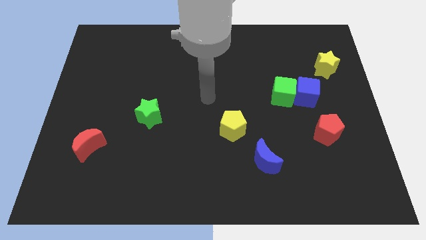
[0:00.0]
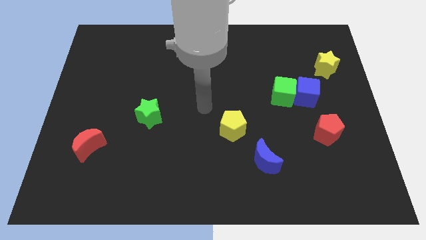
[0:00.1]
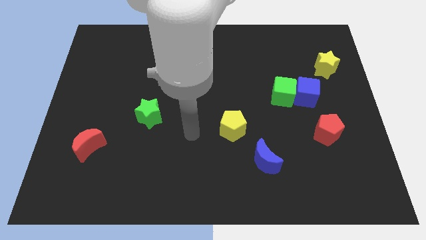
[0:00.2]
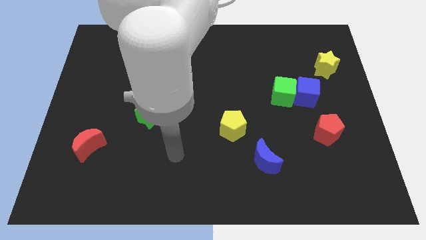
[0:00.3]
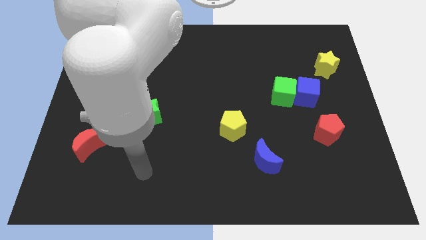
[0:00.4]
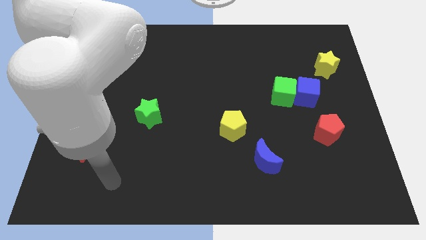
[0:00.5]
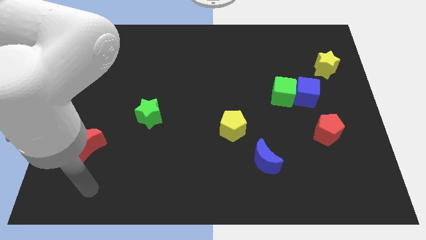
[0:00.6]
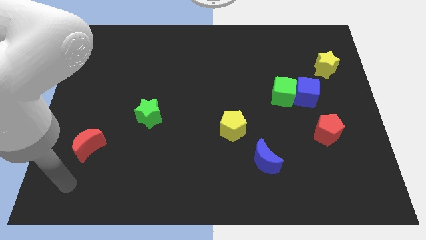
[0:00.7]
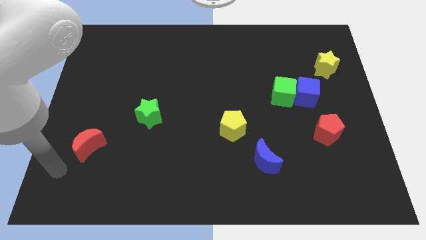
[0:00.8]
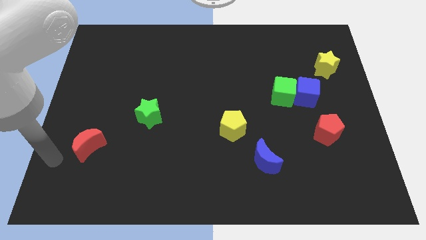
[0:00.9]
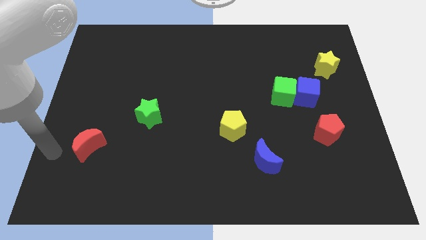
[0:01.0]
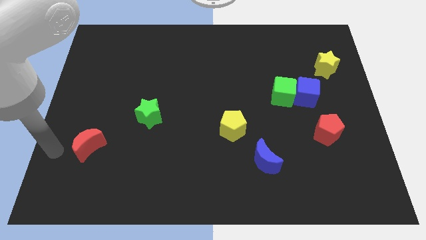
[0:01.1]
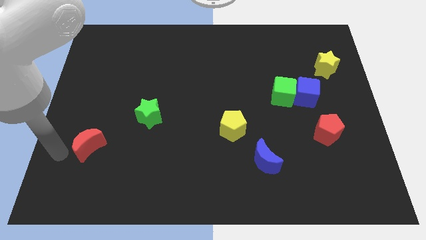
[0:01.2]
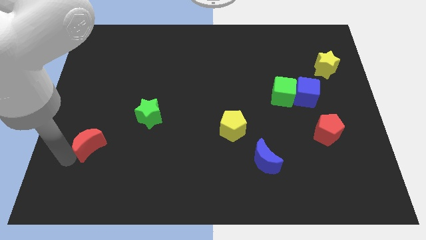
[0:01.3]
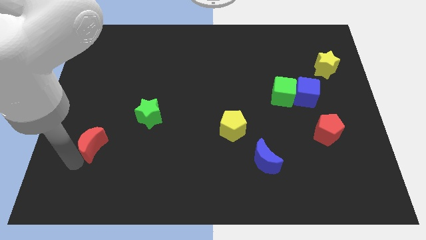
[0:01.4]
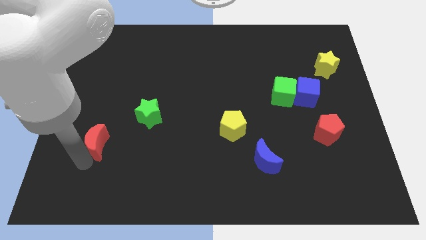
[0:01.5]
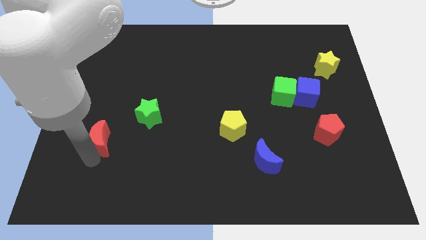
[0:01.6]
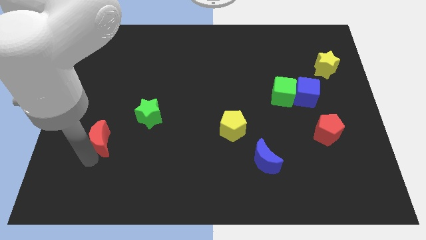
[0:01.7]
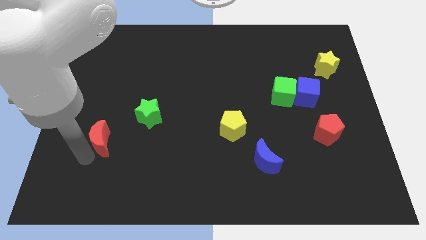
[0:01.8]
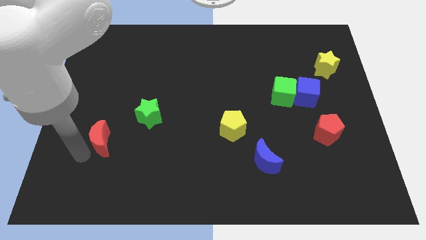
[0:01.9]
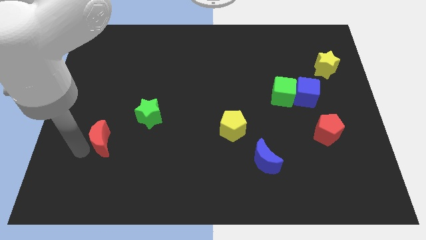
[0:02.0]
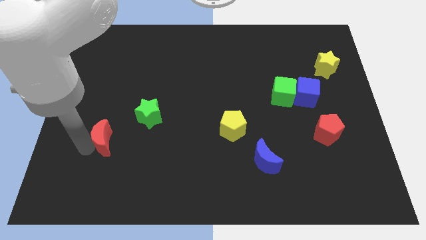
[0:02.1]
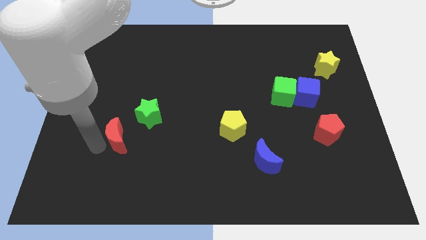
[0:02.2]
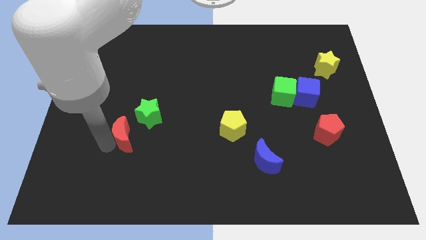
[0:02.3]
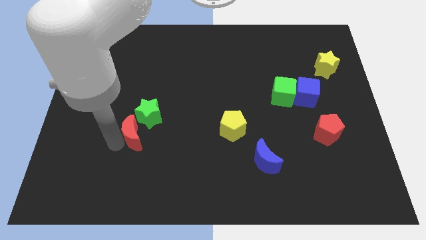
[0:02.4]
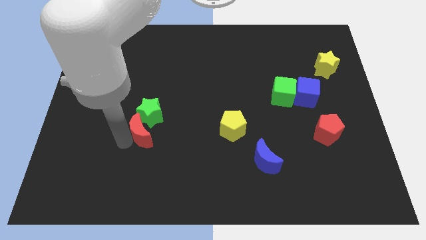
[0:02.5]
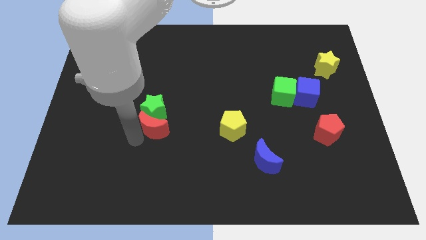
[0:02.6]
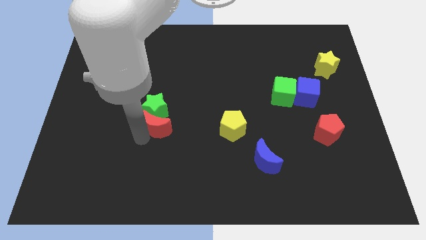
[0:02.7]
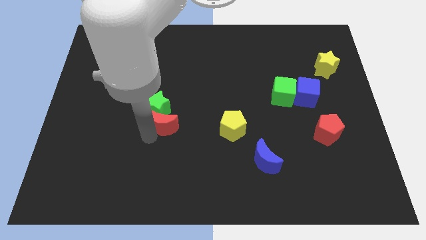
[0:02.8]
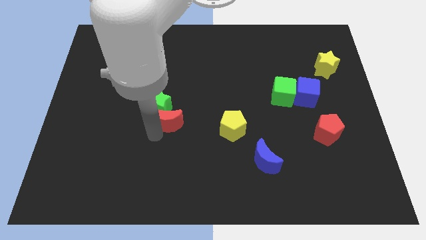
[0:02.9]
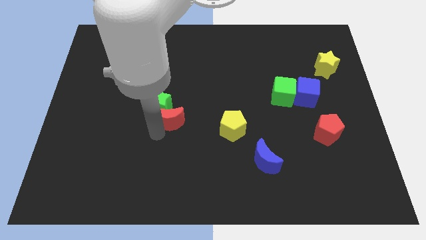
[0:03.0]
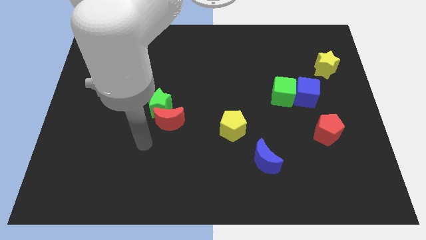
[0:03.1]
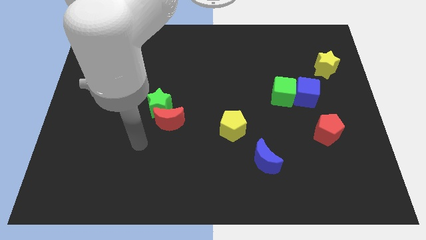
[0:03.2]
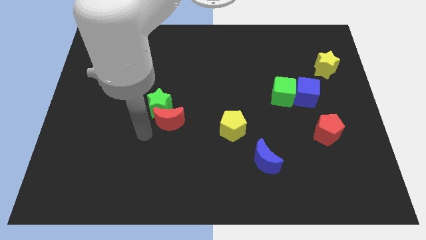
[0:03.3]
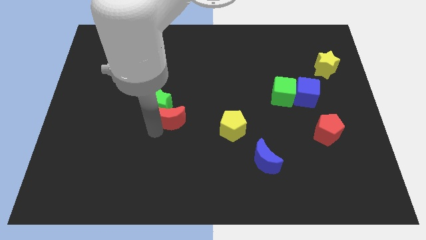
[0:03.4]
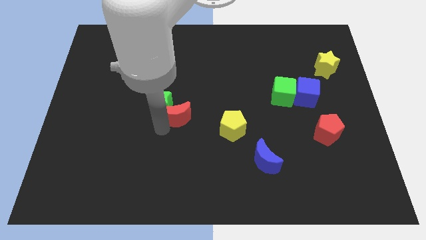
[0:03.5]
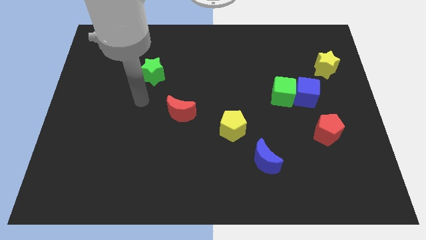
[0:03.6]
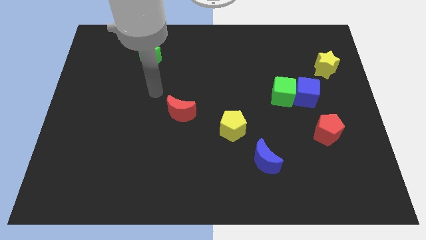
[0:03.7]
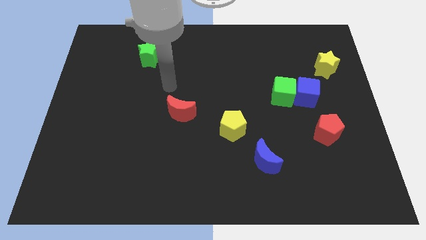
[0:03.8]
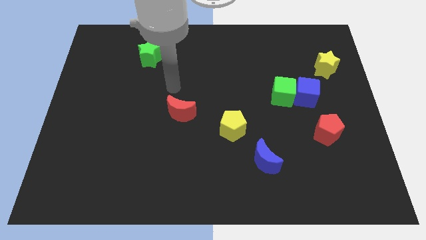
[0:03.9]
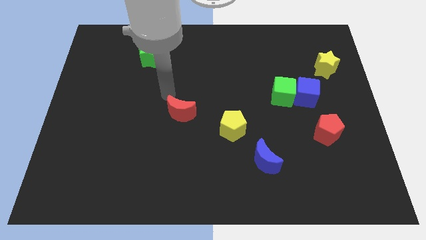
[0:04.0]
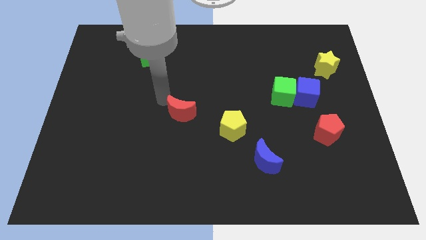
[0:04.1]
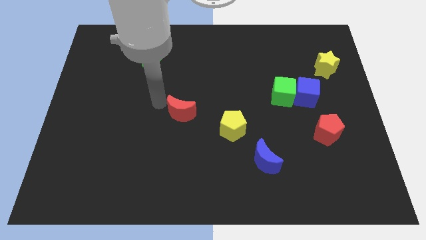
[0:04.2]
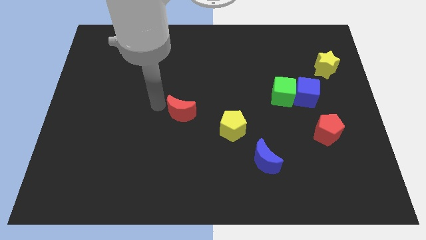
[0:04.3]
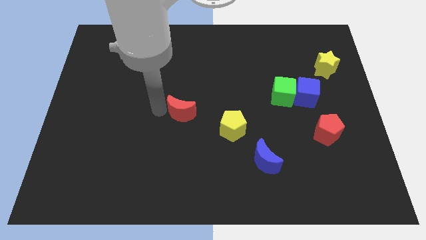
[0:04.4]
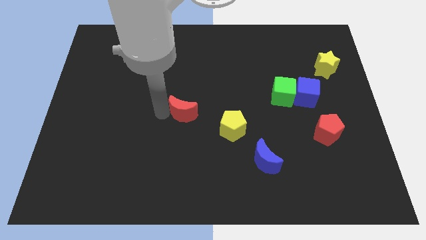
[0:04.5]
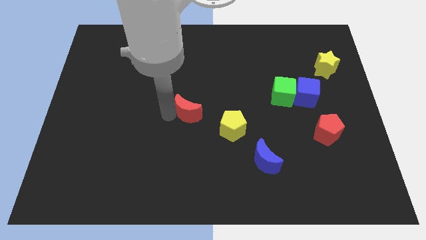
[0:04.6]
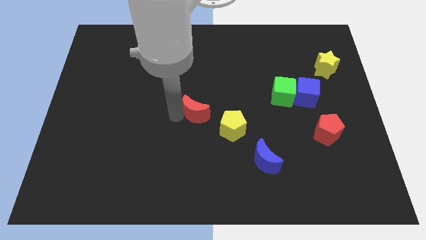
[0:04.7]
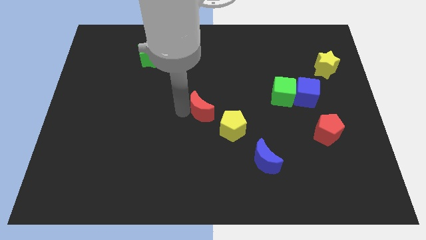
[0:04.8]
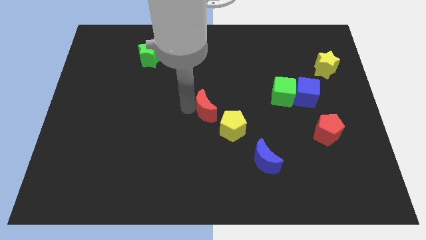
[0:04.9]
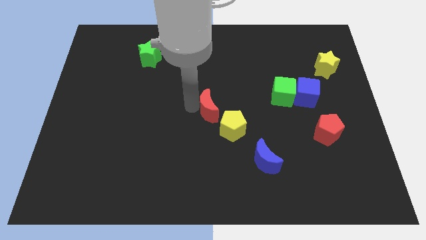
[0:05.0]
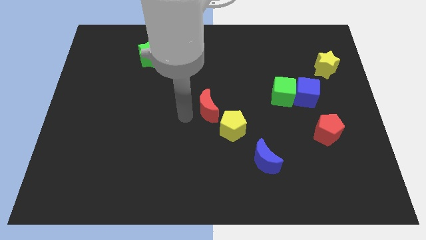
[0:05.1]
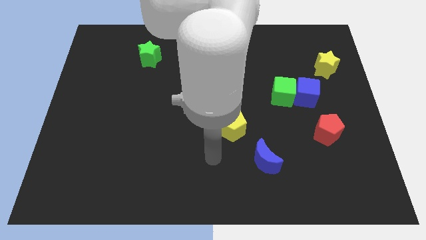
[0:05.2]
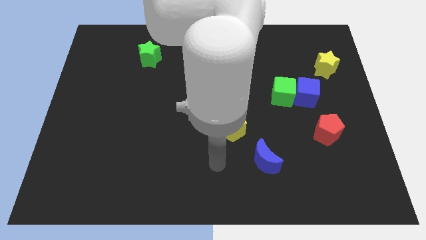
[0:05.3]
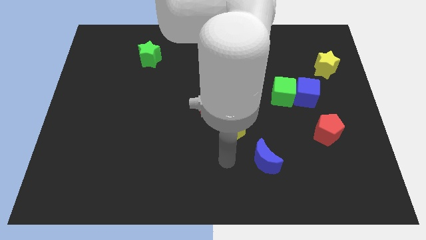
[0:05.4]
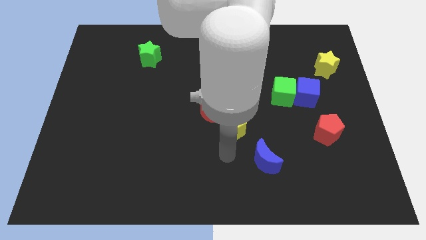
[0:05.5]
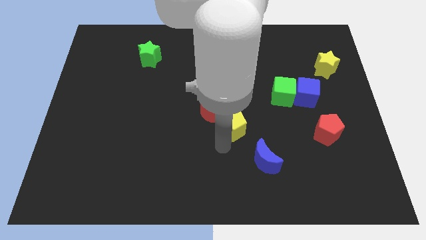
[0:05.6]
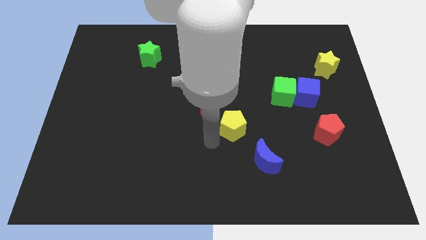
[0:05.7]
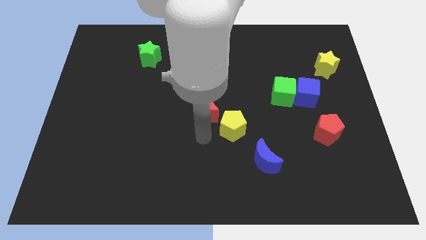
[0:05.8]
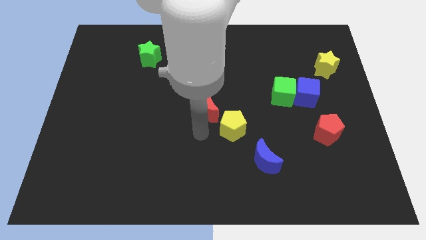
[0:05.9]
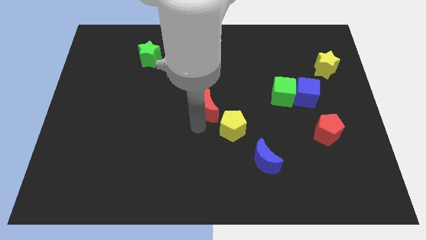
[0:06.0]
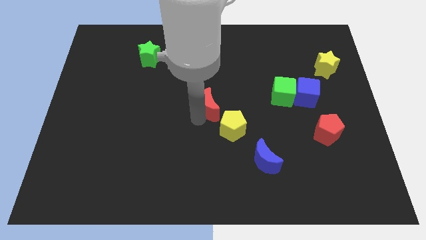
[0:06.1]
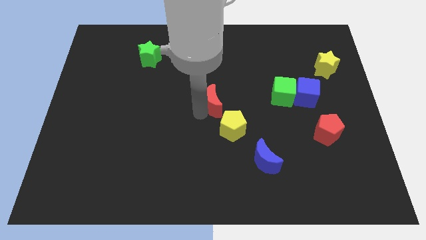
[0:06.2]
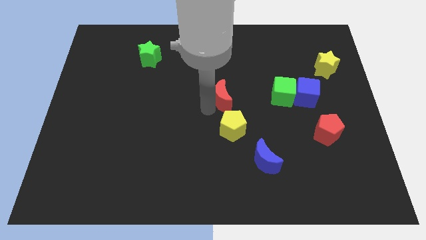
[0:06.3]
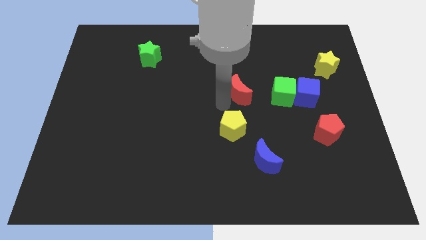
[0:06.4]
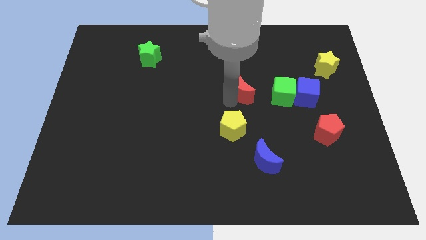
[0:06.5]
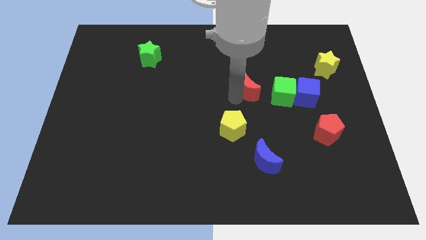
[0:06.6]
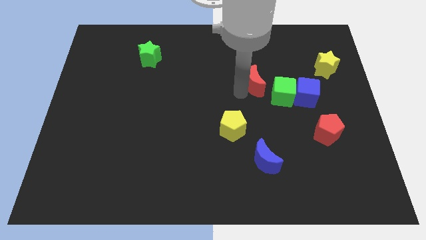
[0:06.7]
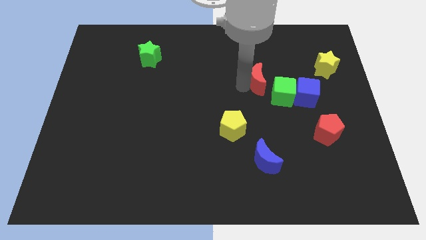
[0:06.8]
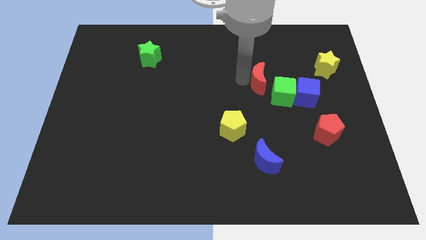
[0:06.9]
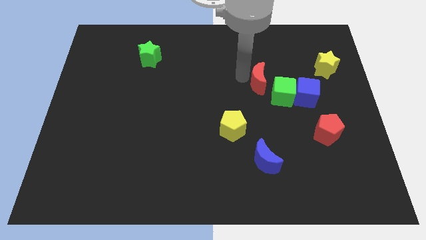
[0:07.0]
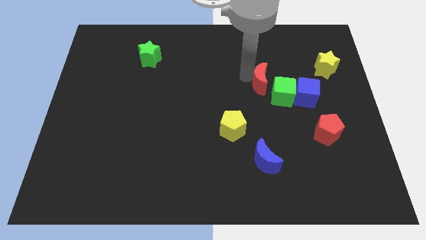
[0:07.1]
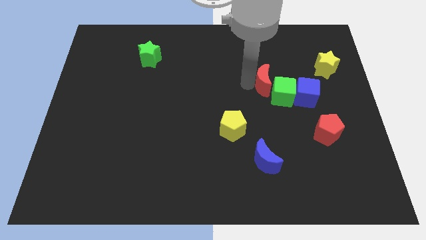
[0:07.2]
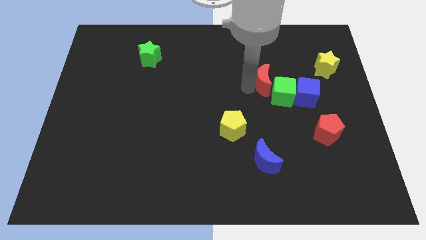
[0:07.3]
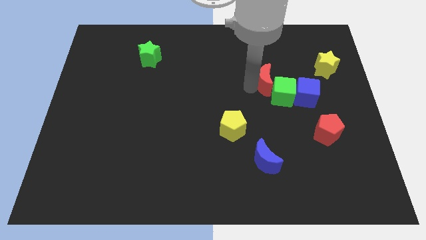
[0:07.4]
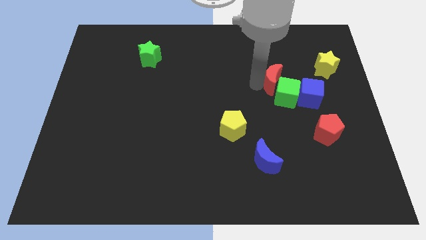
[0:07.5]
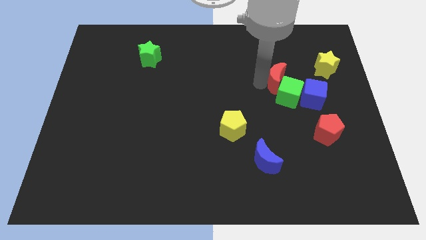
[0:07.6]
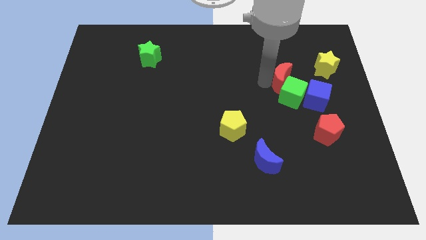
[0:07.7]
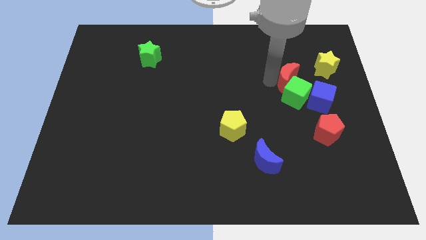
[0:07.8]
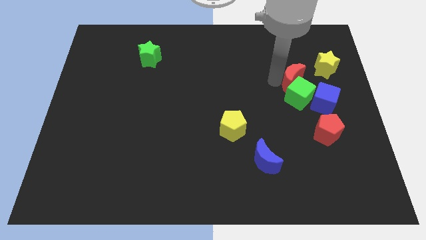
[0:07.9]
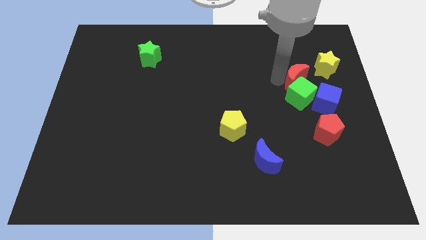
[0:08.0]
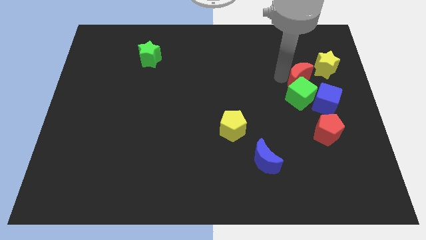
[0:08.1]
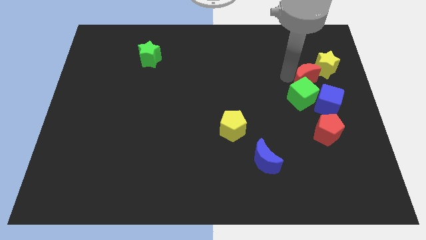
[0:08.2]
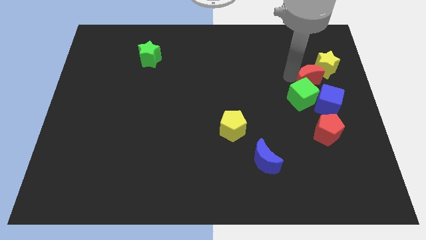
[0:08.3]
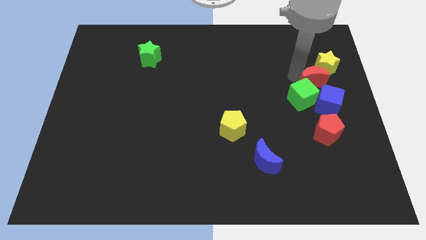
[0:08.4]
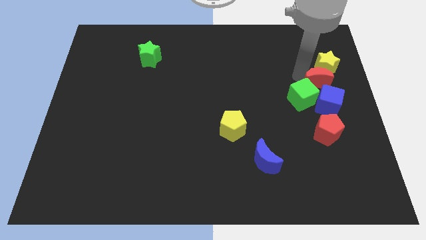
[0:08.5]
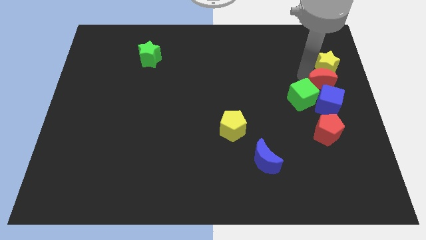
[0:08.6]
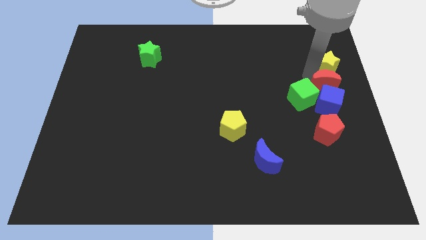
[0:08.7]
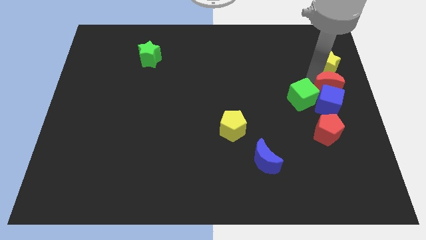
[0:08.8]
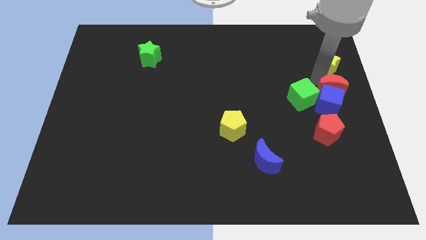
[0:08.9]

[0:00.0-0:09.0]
push the red moon next to the blue cube
